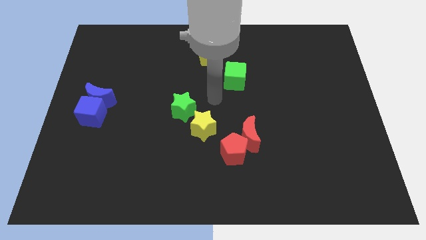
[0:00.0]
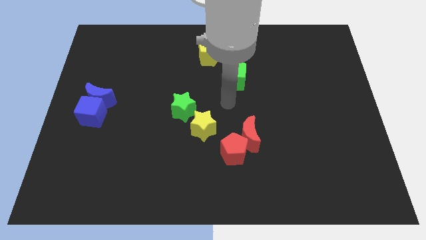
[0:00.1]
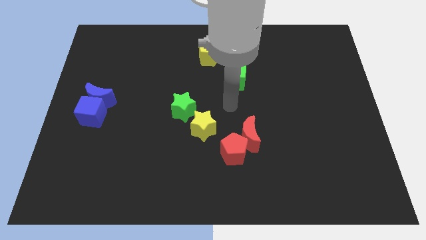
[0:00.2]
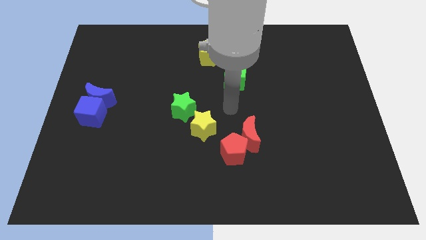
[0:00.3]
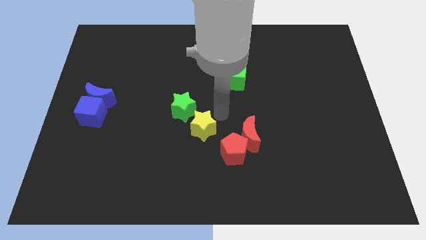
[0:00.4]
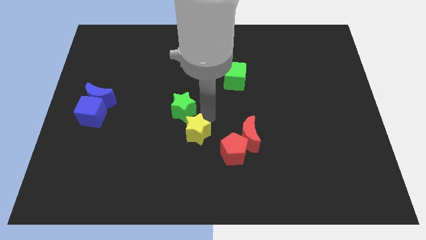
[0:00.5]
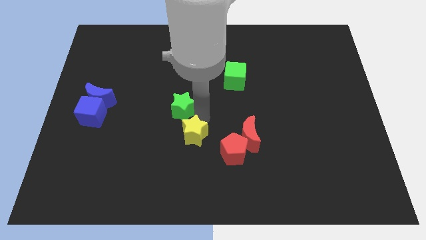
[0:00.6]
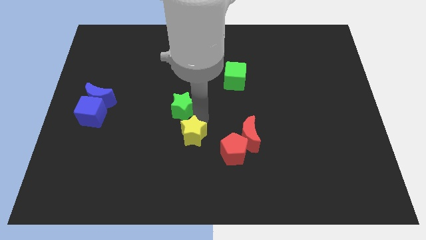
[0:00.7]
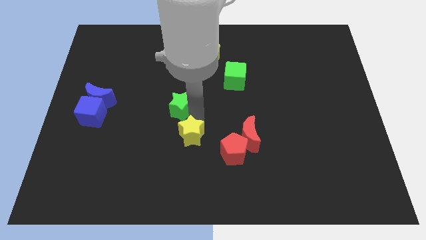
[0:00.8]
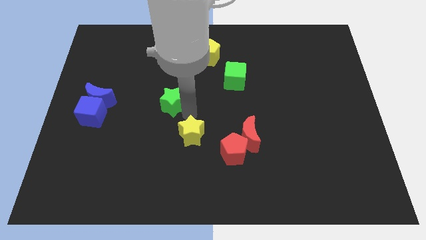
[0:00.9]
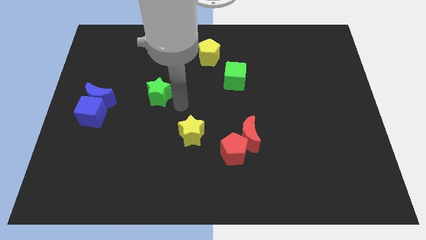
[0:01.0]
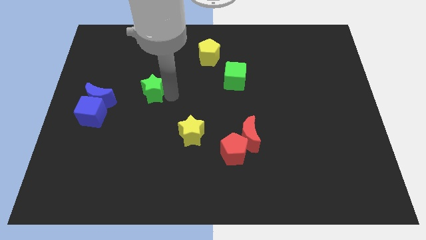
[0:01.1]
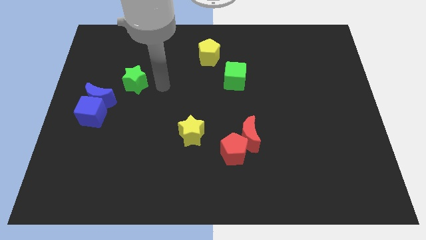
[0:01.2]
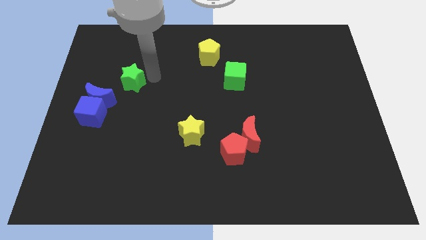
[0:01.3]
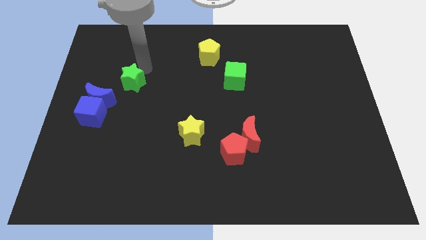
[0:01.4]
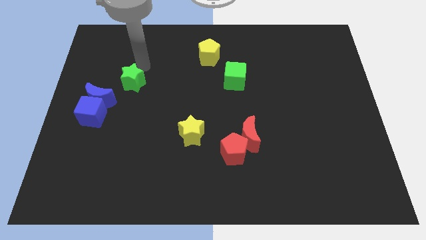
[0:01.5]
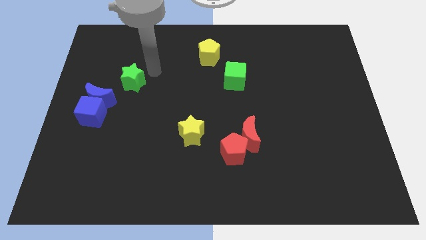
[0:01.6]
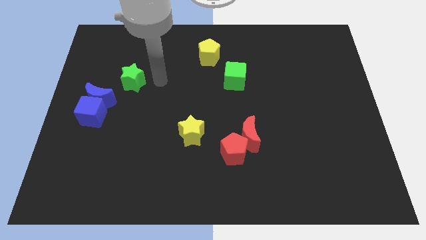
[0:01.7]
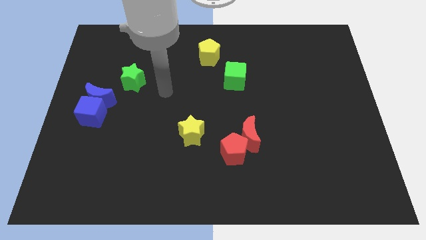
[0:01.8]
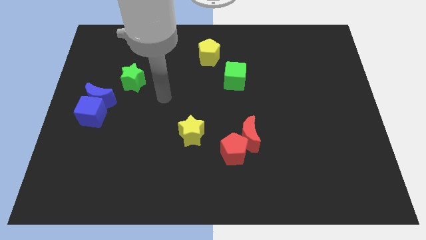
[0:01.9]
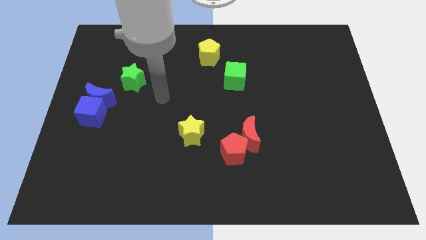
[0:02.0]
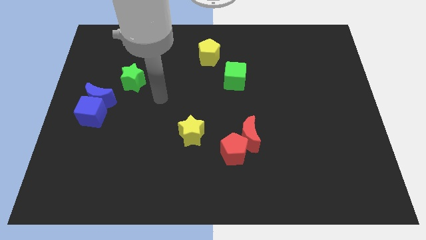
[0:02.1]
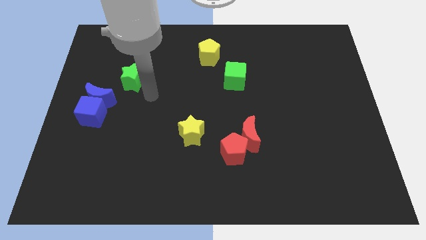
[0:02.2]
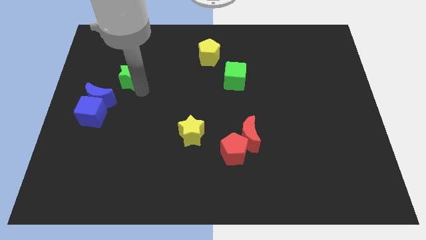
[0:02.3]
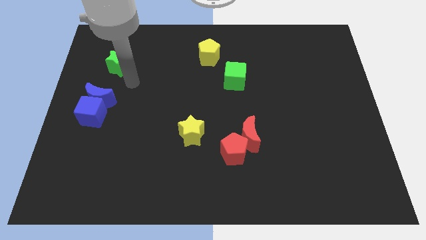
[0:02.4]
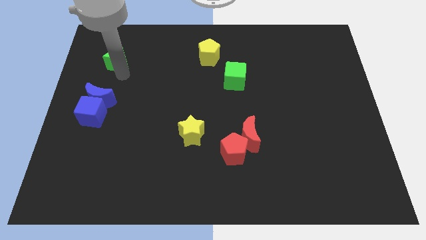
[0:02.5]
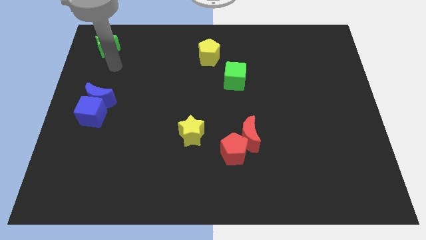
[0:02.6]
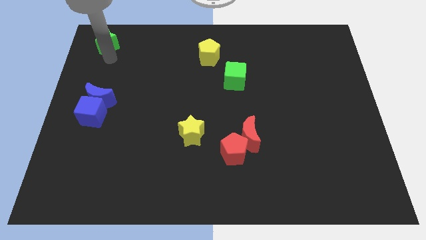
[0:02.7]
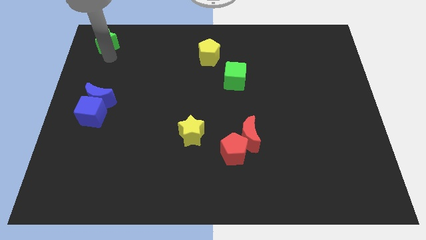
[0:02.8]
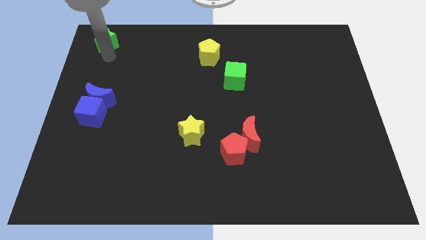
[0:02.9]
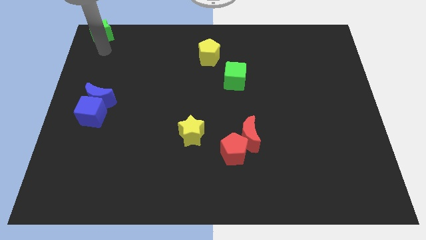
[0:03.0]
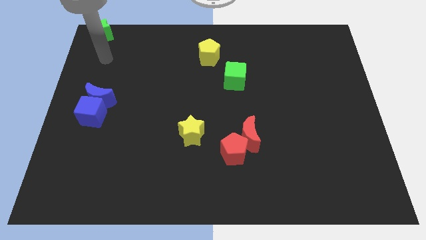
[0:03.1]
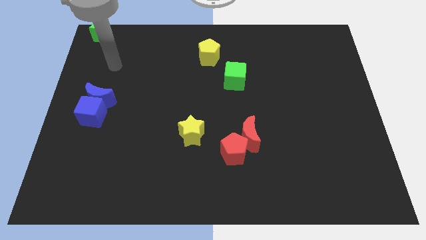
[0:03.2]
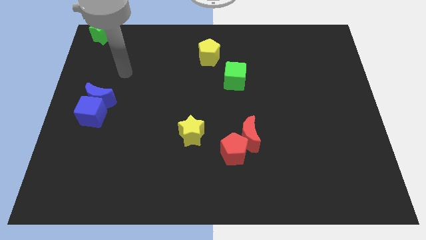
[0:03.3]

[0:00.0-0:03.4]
place the green star above the blue moon

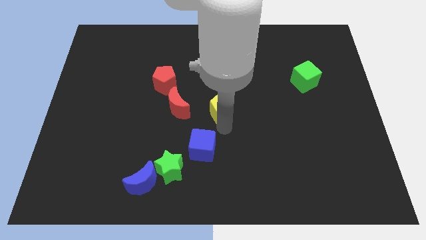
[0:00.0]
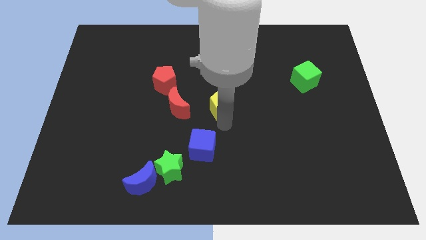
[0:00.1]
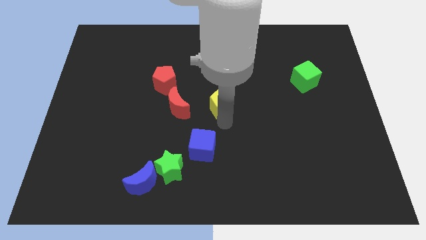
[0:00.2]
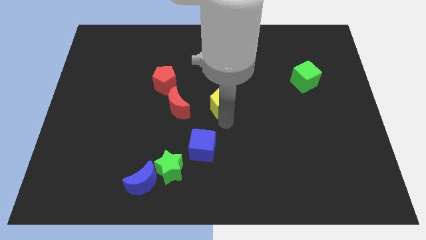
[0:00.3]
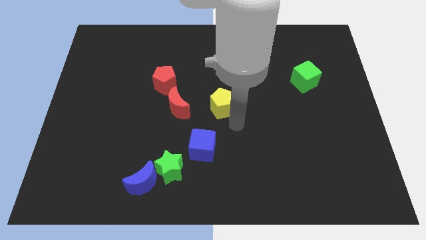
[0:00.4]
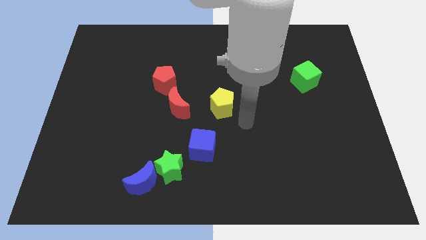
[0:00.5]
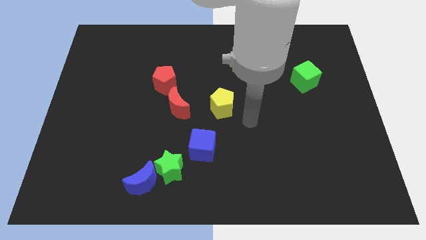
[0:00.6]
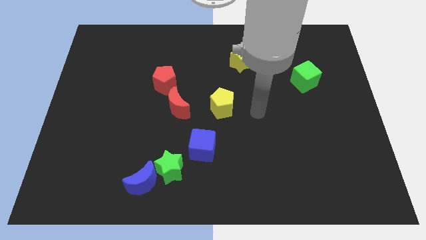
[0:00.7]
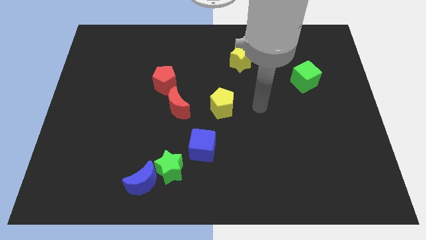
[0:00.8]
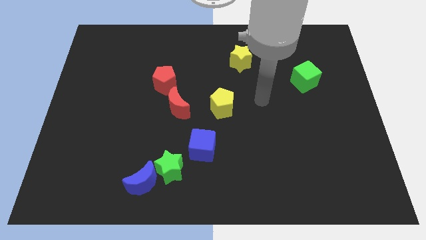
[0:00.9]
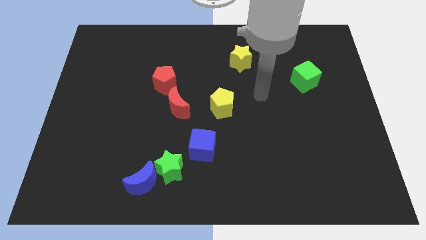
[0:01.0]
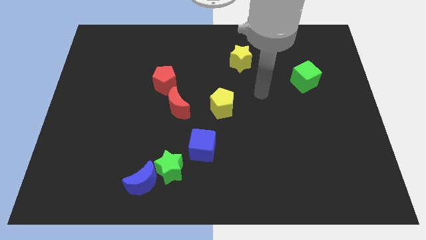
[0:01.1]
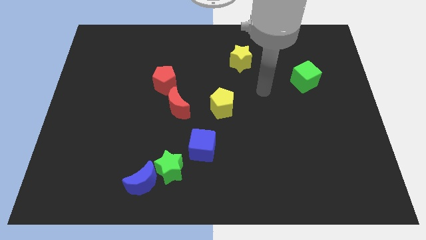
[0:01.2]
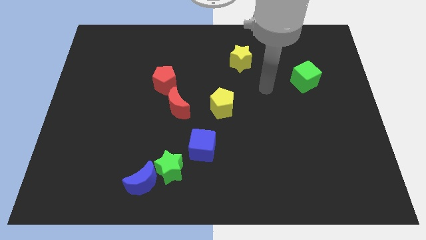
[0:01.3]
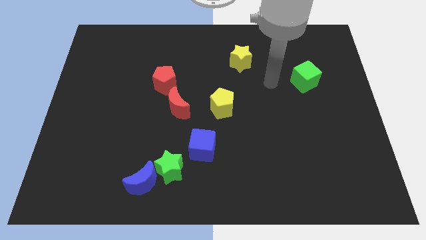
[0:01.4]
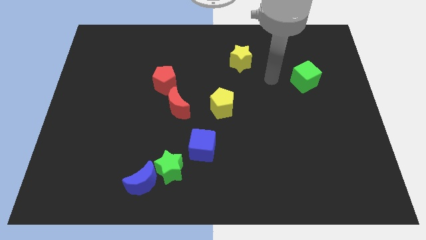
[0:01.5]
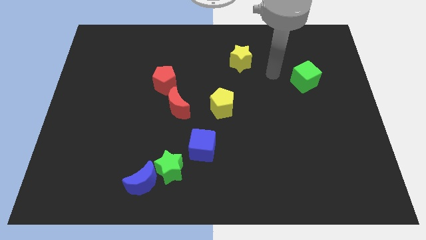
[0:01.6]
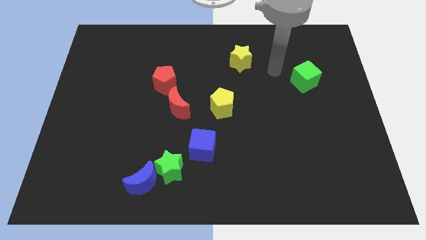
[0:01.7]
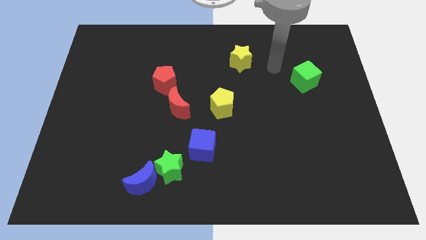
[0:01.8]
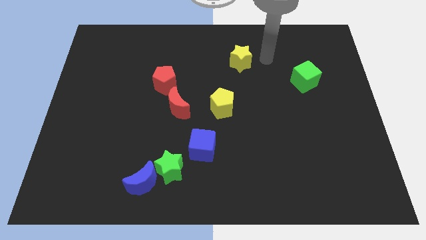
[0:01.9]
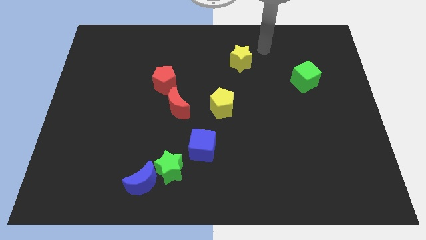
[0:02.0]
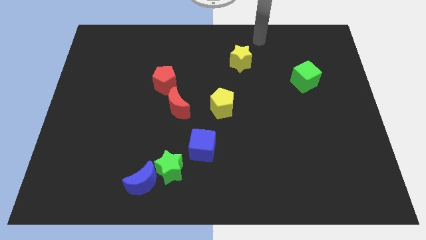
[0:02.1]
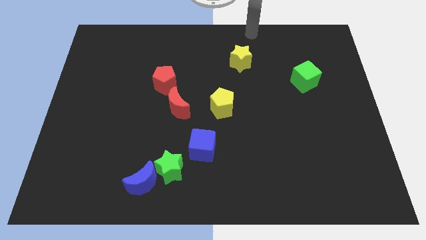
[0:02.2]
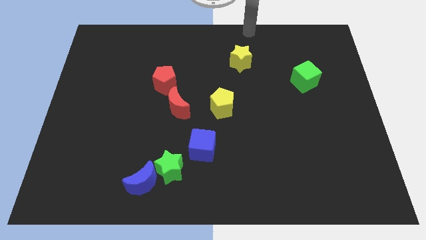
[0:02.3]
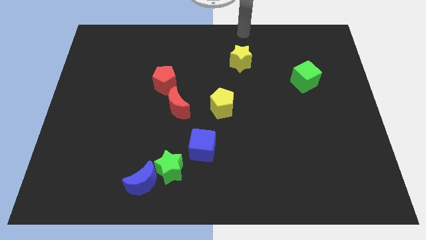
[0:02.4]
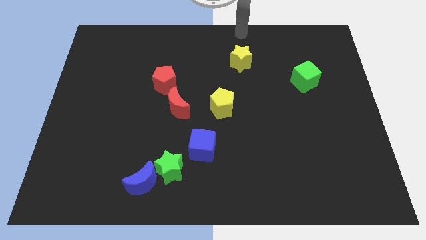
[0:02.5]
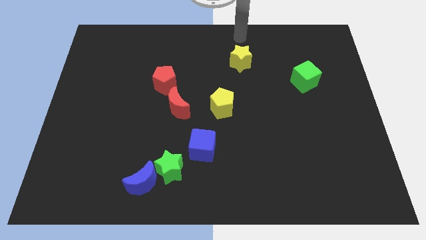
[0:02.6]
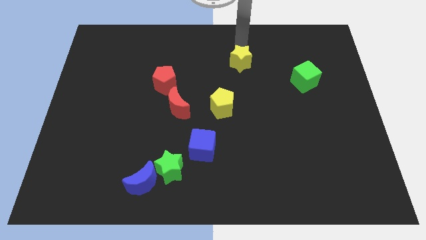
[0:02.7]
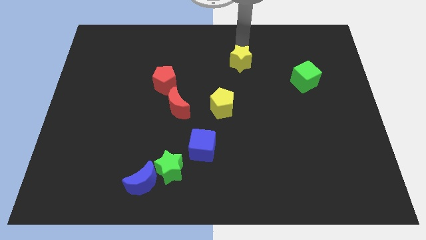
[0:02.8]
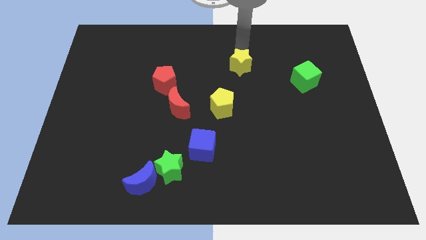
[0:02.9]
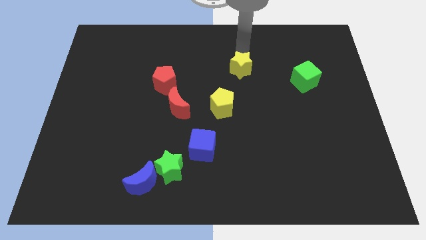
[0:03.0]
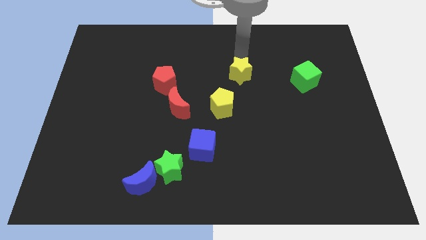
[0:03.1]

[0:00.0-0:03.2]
touch the top of the yellow star

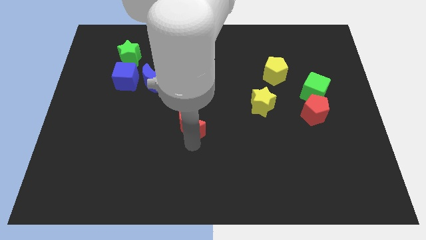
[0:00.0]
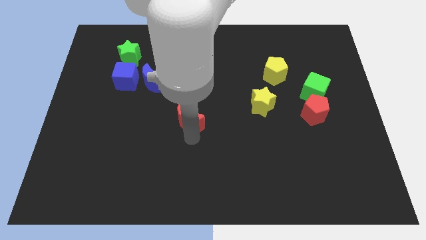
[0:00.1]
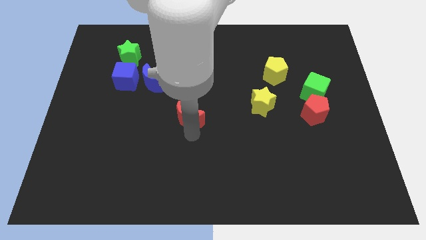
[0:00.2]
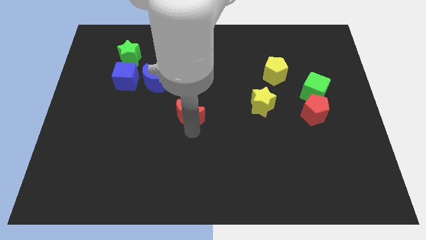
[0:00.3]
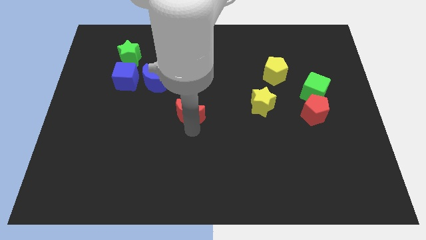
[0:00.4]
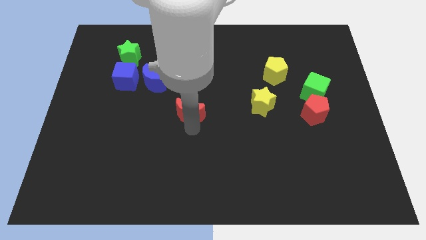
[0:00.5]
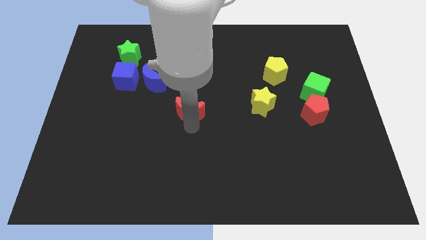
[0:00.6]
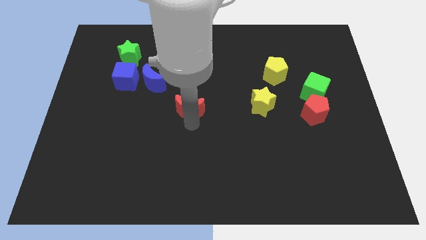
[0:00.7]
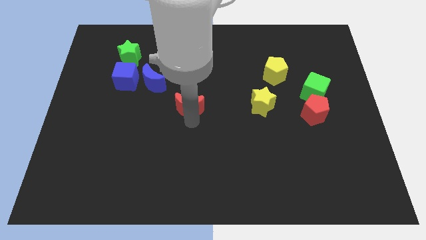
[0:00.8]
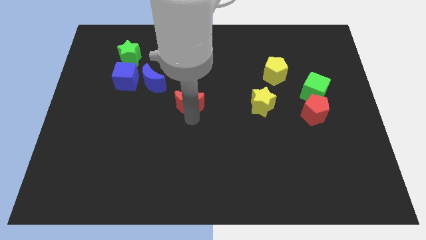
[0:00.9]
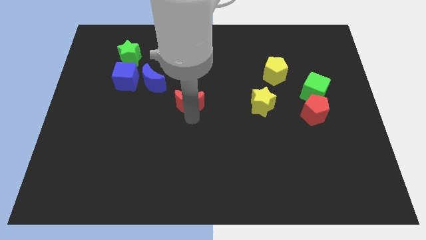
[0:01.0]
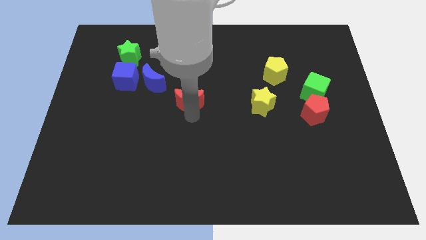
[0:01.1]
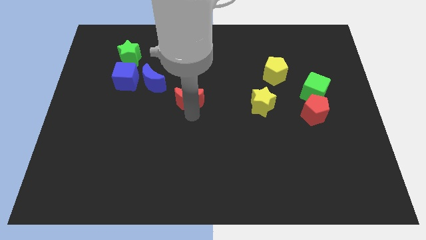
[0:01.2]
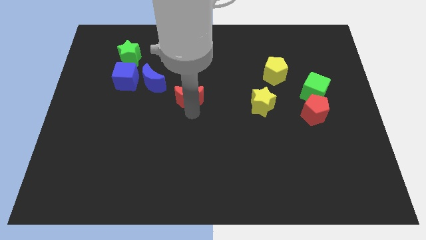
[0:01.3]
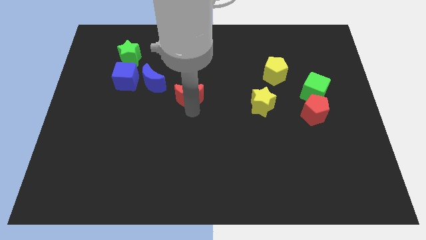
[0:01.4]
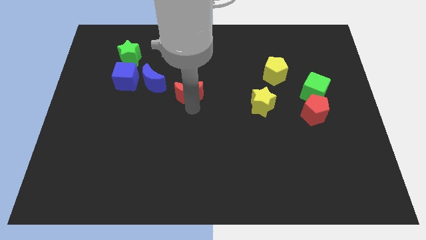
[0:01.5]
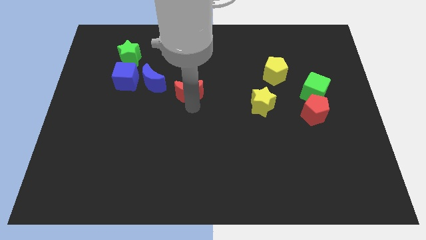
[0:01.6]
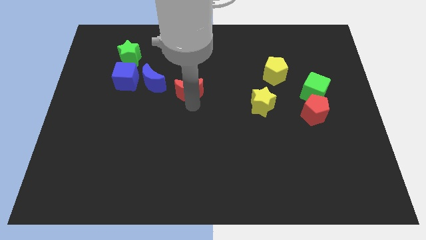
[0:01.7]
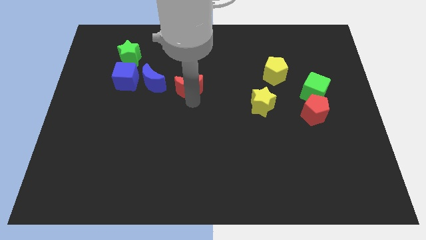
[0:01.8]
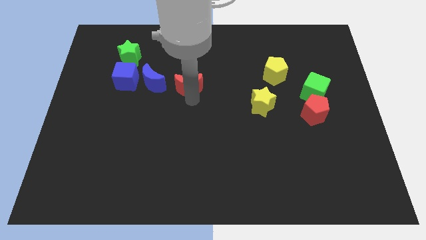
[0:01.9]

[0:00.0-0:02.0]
put the red moon parallel right to the blue moon

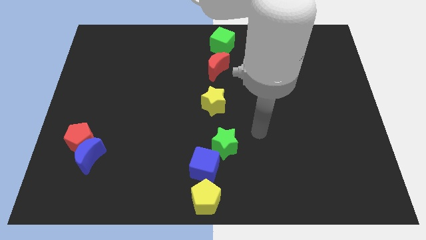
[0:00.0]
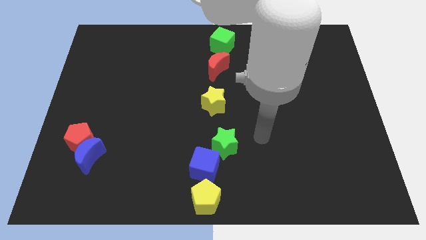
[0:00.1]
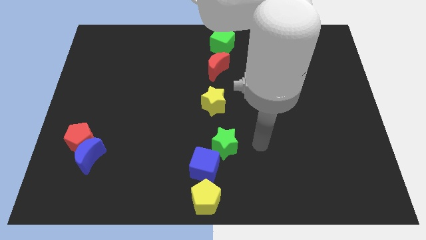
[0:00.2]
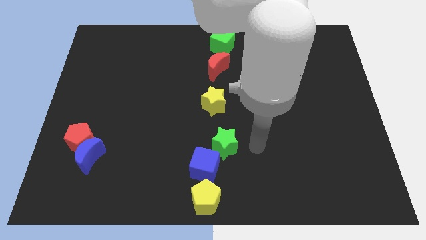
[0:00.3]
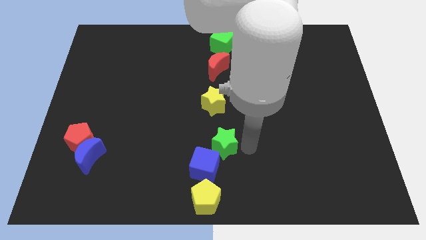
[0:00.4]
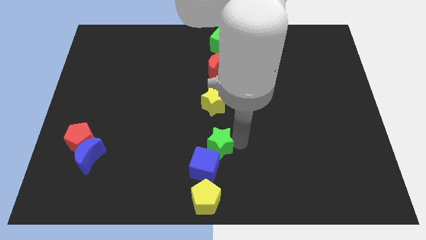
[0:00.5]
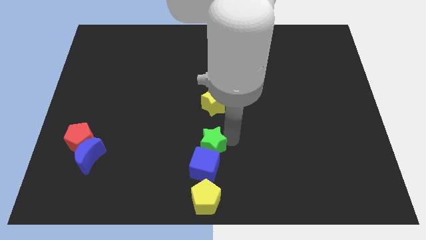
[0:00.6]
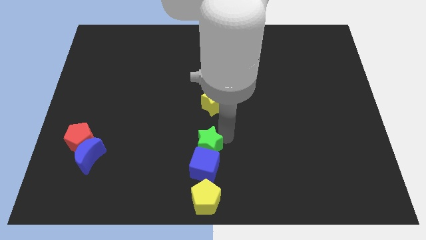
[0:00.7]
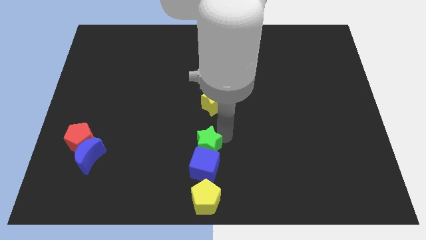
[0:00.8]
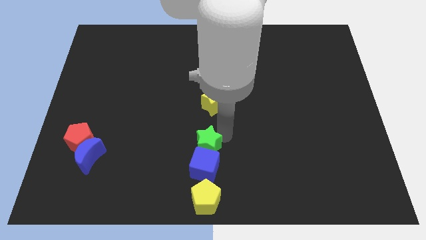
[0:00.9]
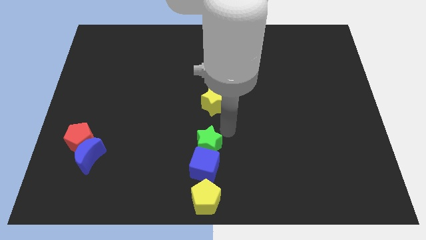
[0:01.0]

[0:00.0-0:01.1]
place the green star above the blue cube
